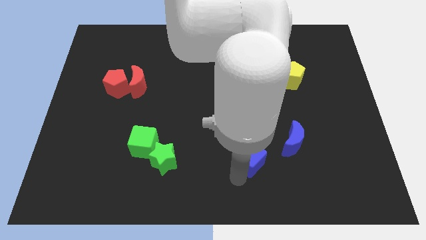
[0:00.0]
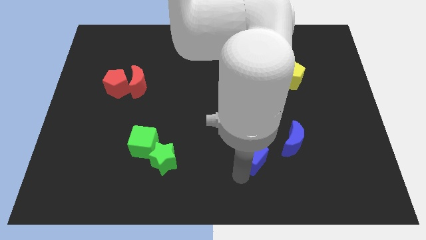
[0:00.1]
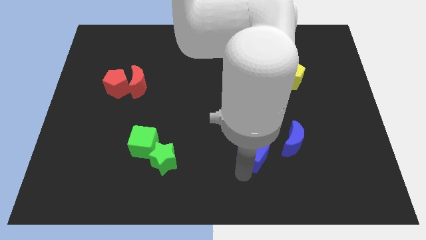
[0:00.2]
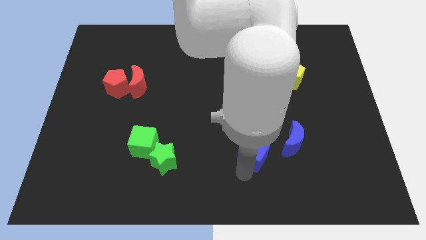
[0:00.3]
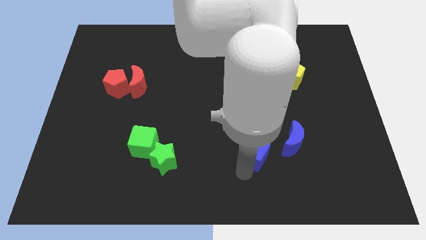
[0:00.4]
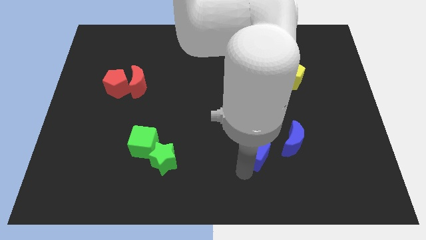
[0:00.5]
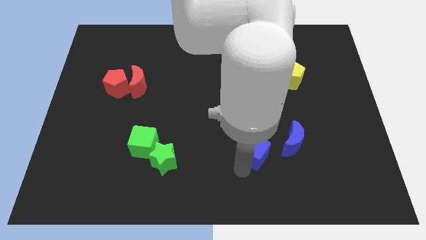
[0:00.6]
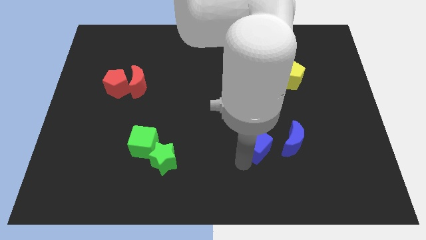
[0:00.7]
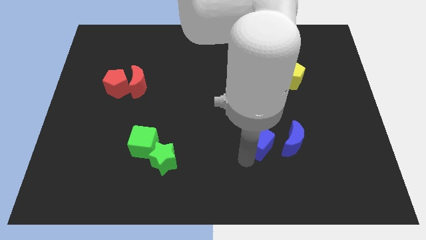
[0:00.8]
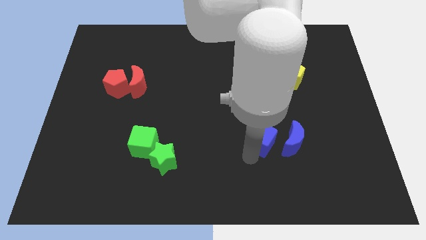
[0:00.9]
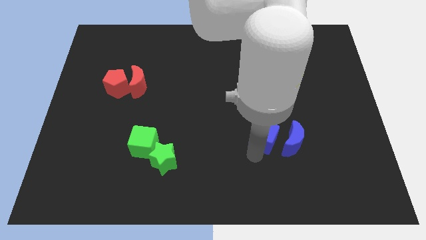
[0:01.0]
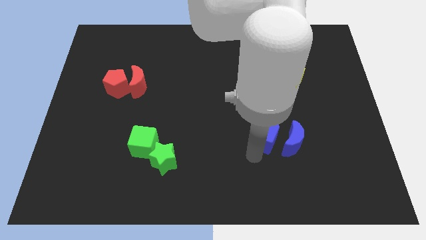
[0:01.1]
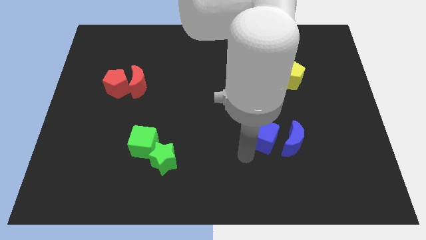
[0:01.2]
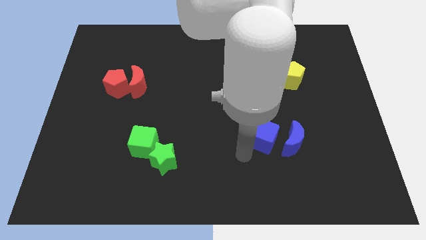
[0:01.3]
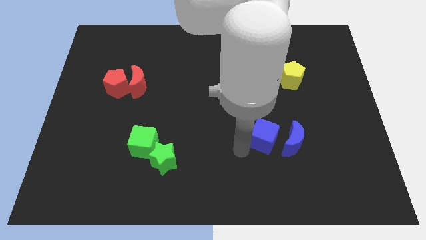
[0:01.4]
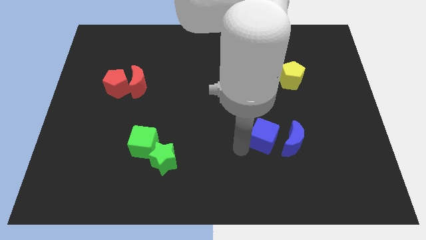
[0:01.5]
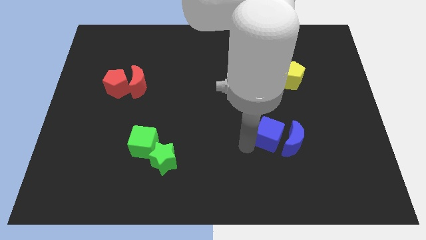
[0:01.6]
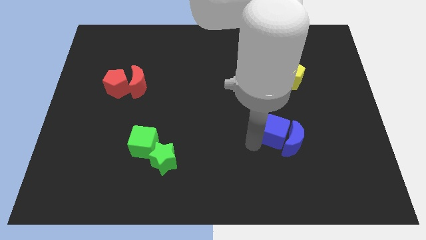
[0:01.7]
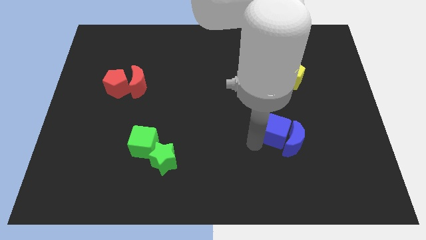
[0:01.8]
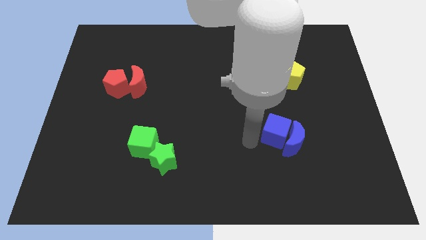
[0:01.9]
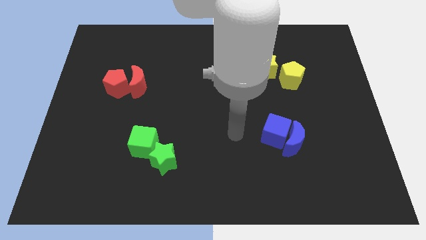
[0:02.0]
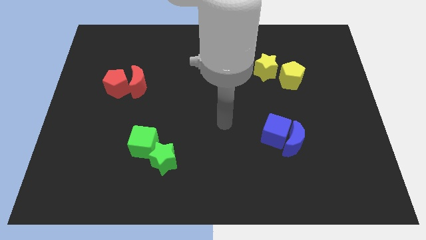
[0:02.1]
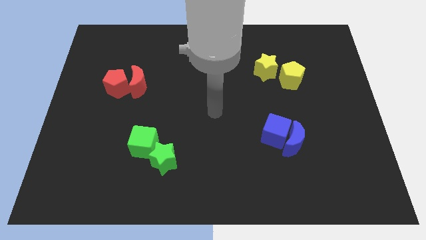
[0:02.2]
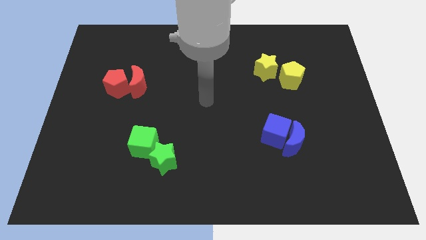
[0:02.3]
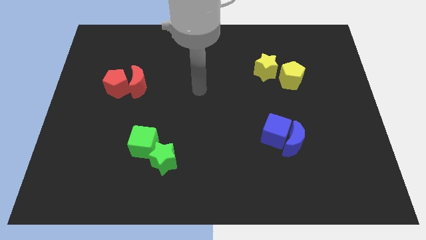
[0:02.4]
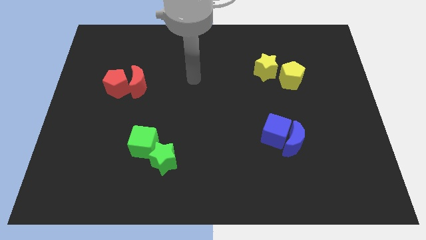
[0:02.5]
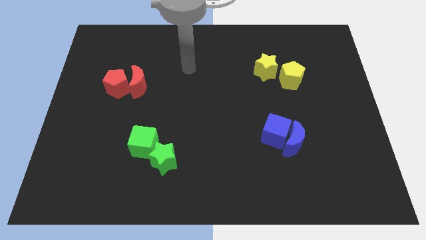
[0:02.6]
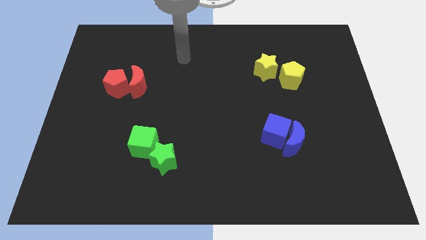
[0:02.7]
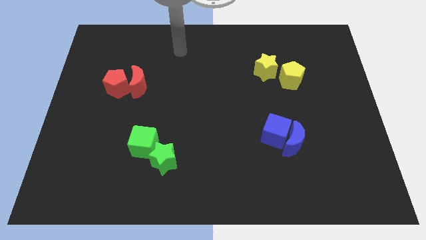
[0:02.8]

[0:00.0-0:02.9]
move the blue cube into the left side of the blue crescent

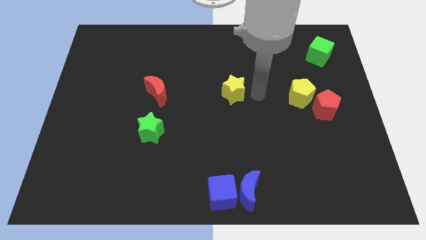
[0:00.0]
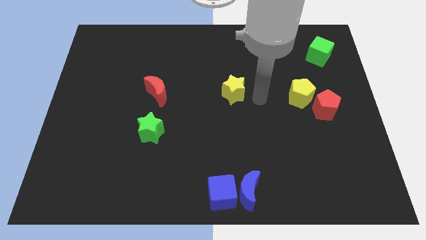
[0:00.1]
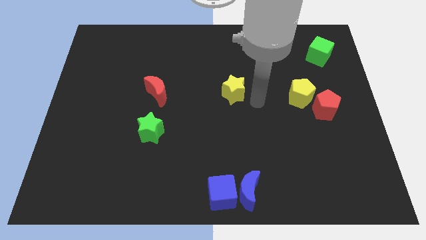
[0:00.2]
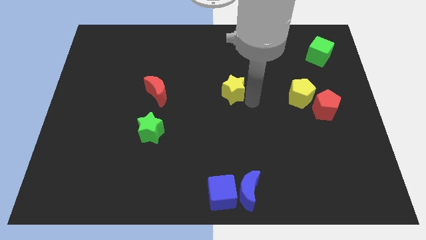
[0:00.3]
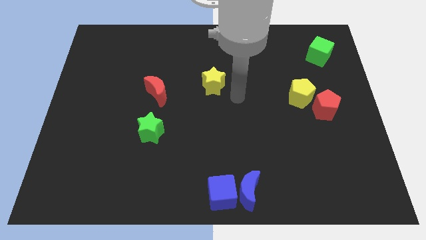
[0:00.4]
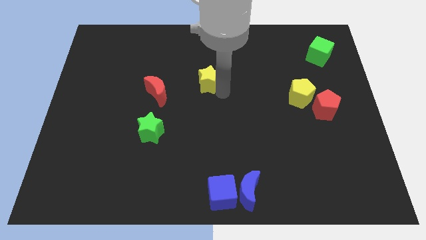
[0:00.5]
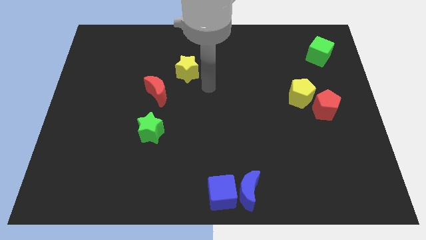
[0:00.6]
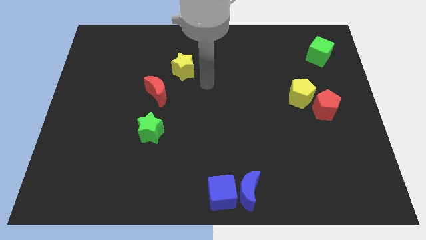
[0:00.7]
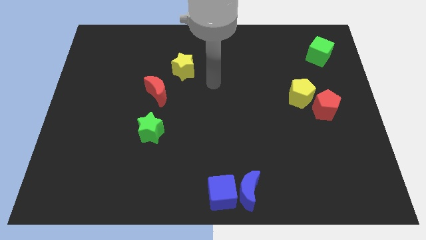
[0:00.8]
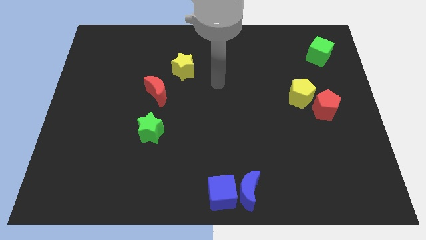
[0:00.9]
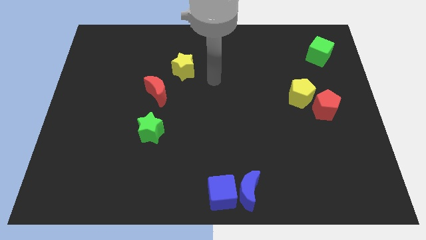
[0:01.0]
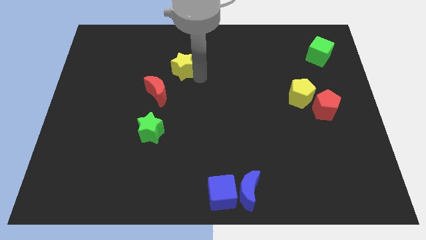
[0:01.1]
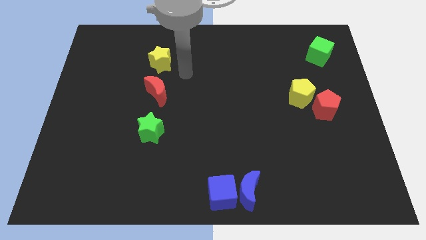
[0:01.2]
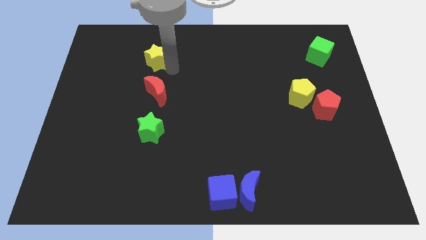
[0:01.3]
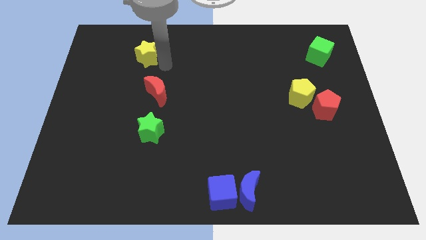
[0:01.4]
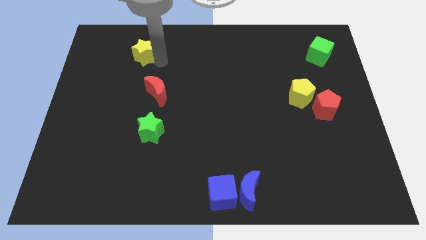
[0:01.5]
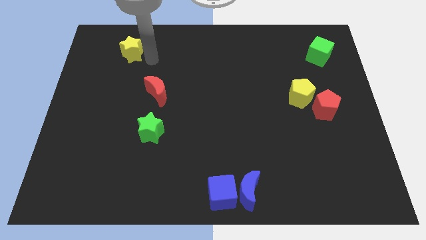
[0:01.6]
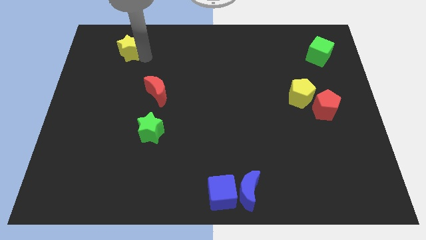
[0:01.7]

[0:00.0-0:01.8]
slide the yellow star diagonally top left to the red moon

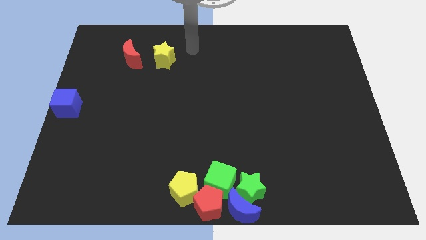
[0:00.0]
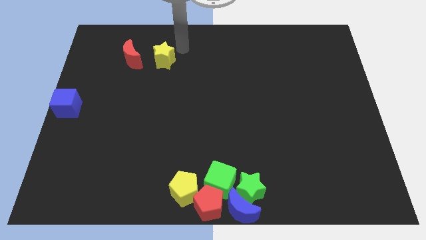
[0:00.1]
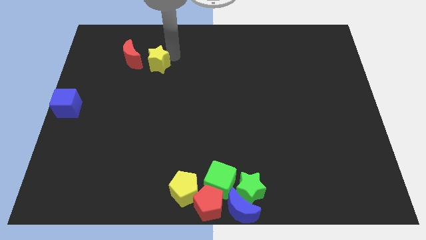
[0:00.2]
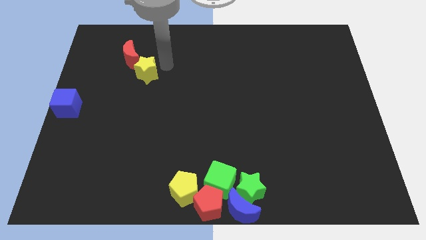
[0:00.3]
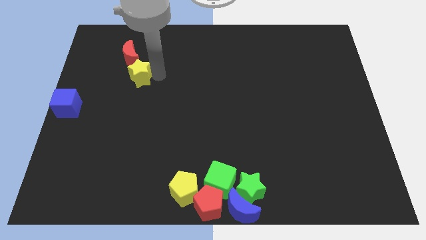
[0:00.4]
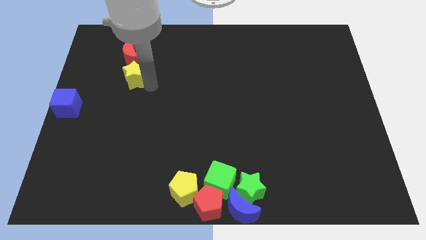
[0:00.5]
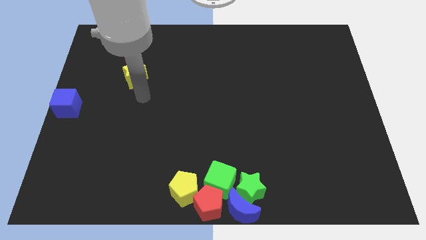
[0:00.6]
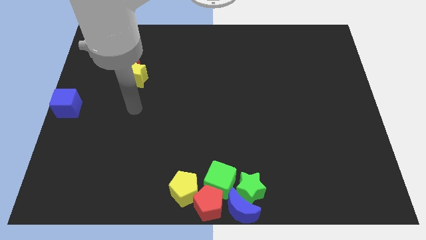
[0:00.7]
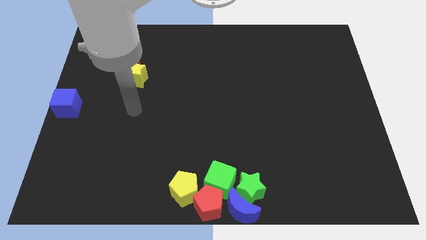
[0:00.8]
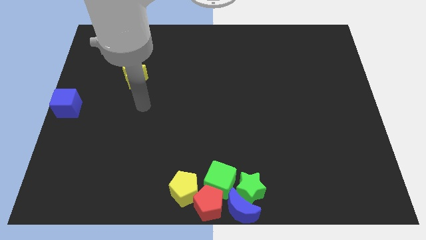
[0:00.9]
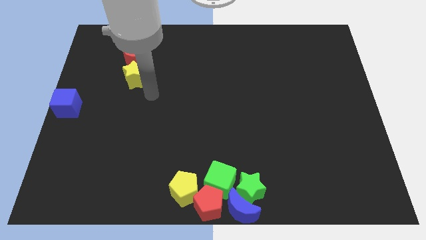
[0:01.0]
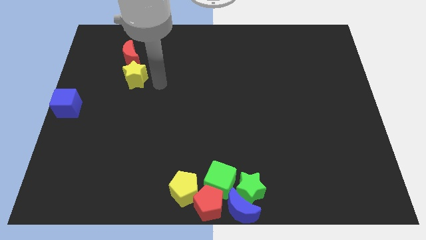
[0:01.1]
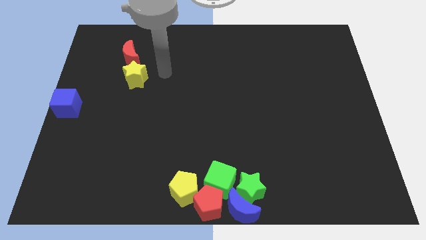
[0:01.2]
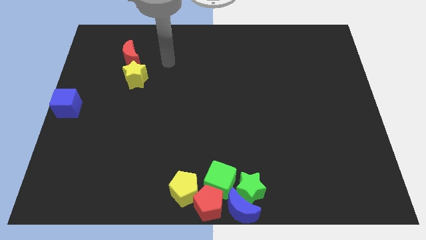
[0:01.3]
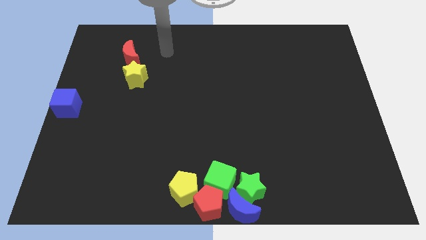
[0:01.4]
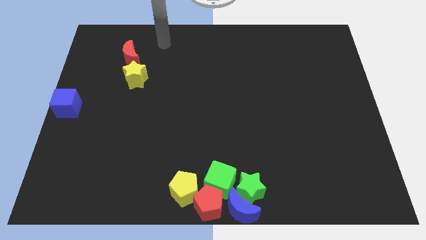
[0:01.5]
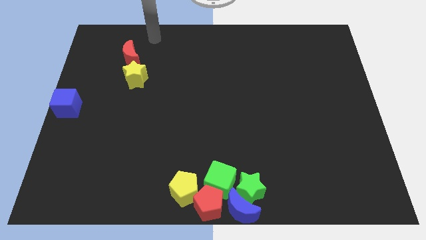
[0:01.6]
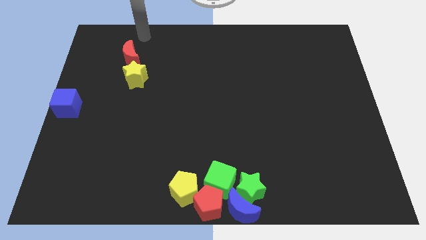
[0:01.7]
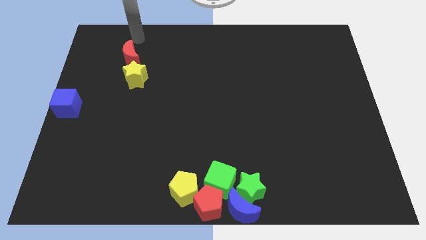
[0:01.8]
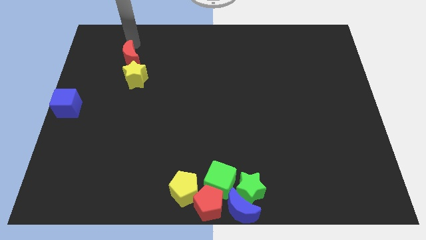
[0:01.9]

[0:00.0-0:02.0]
move the yellow star below the red moon

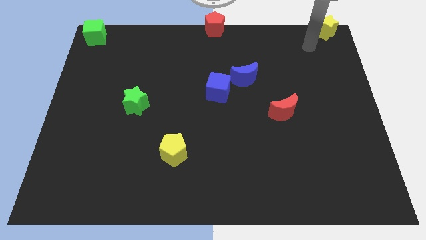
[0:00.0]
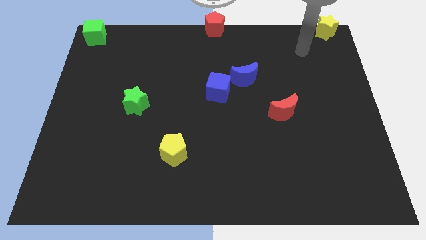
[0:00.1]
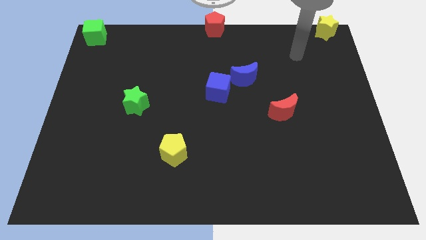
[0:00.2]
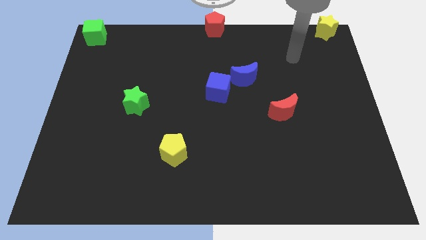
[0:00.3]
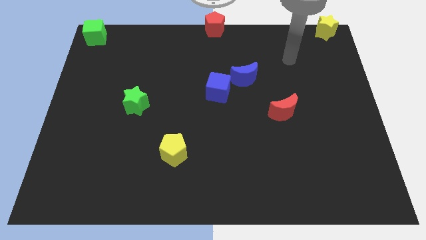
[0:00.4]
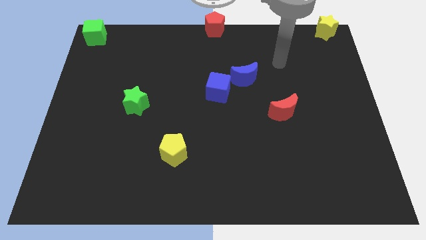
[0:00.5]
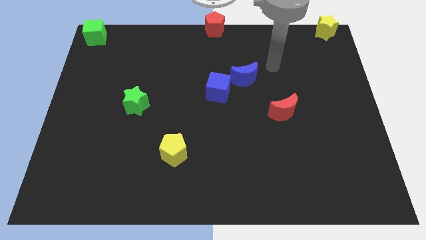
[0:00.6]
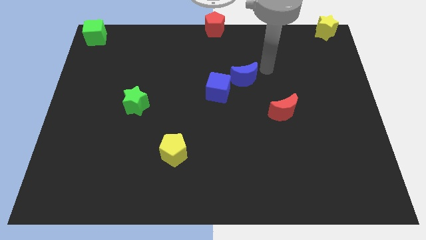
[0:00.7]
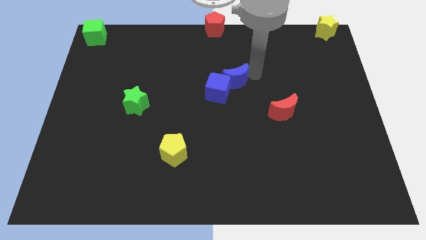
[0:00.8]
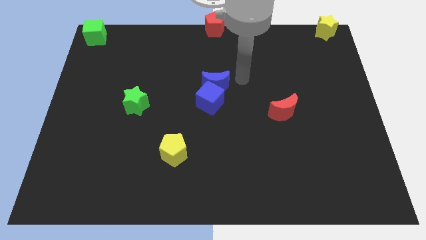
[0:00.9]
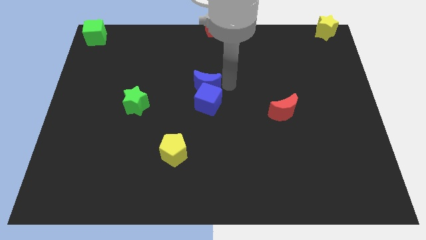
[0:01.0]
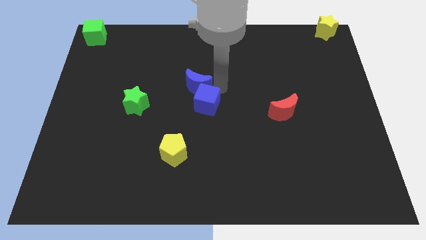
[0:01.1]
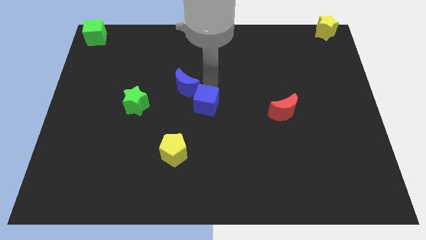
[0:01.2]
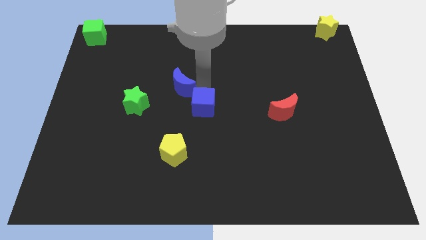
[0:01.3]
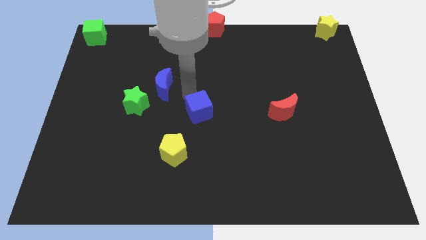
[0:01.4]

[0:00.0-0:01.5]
push the blue moon into the blue cube

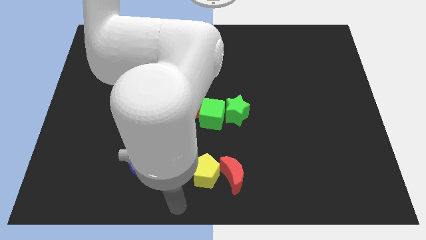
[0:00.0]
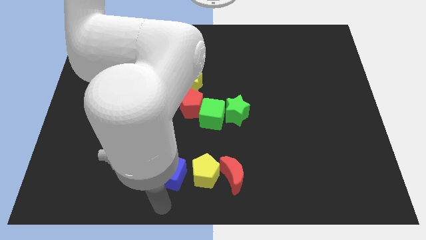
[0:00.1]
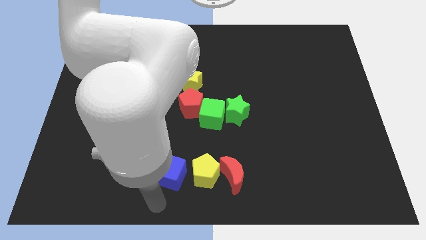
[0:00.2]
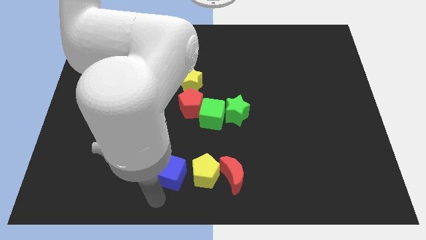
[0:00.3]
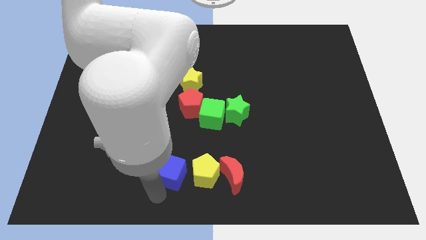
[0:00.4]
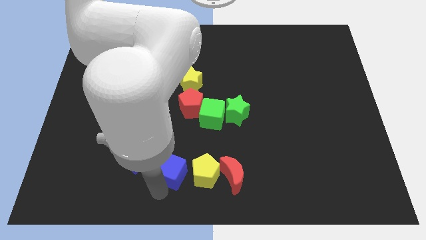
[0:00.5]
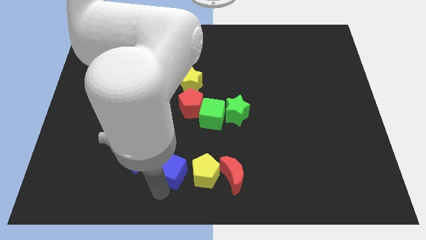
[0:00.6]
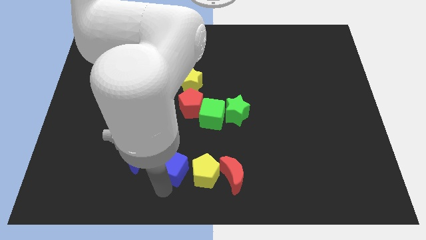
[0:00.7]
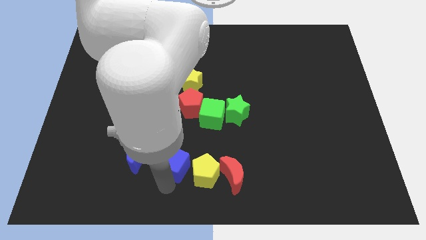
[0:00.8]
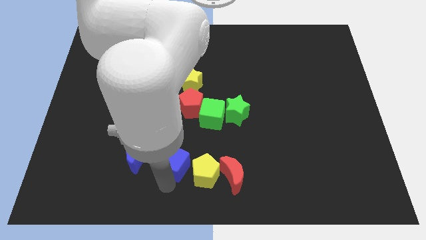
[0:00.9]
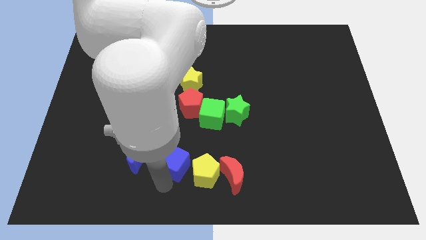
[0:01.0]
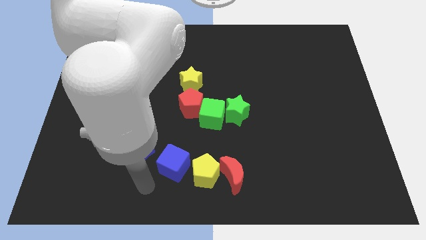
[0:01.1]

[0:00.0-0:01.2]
slightly push the blue cube upwards
